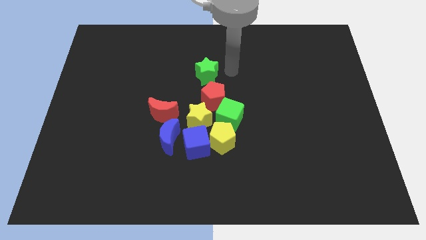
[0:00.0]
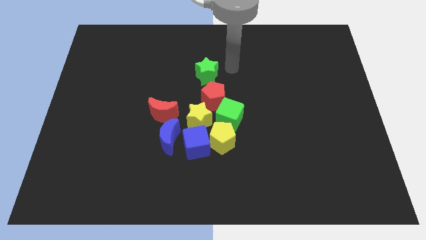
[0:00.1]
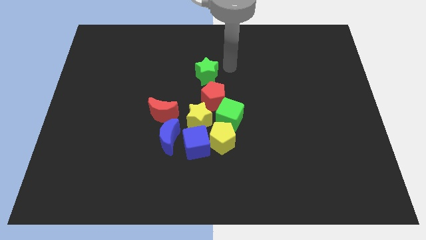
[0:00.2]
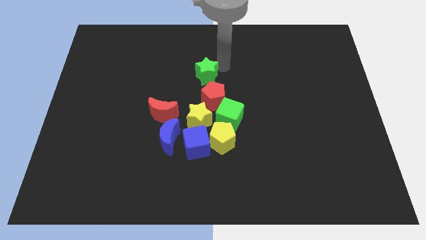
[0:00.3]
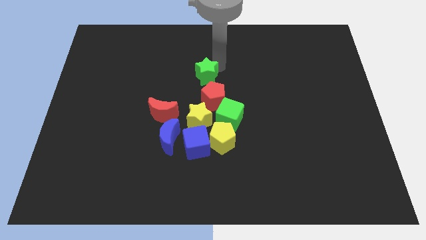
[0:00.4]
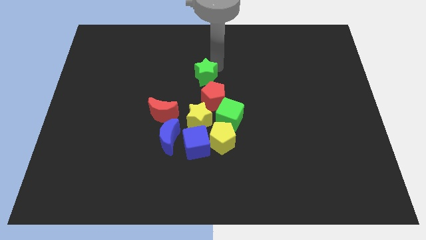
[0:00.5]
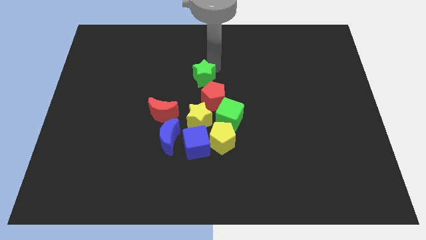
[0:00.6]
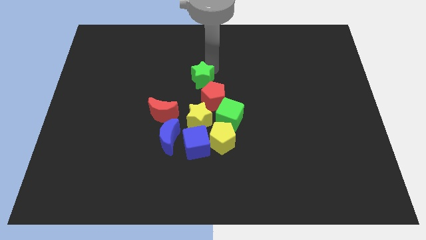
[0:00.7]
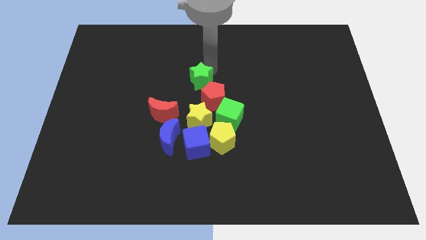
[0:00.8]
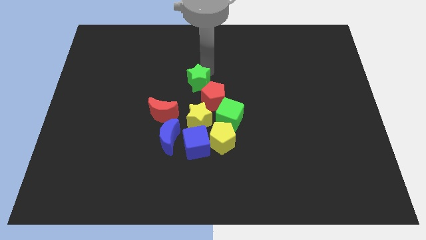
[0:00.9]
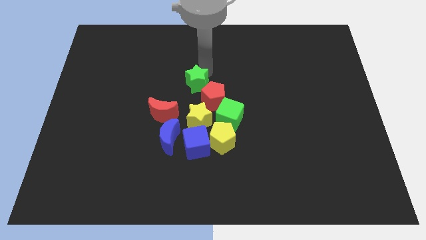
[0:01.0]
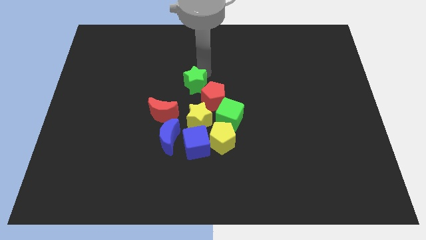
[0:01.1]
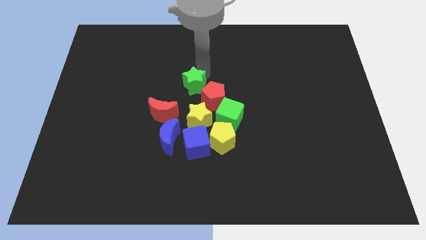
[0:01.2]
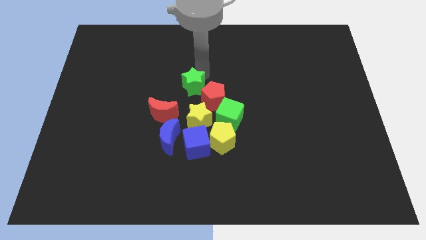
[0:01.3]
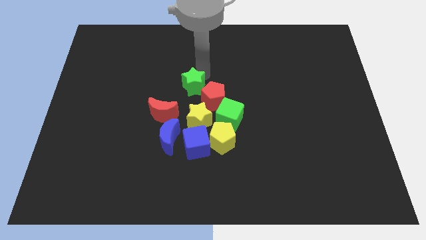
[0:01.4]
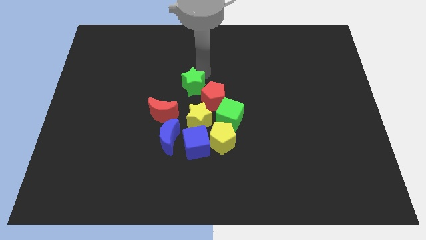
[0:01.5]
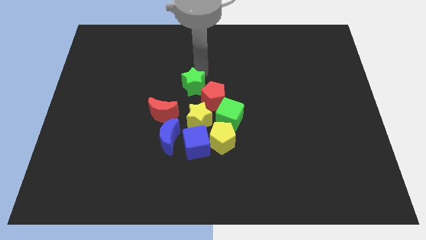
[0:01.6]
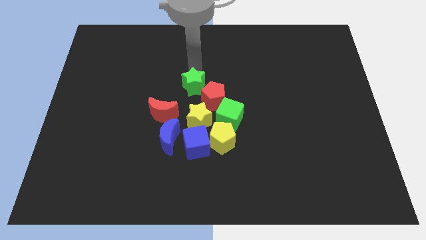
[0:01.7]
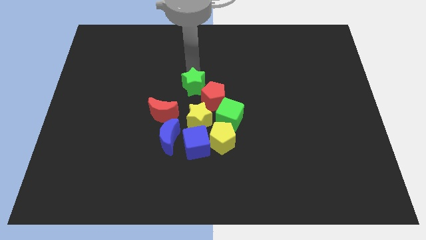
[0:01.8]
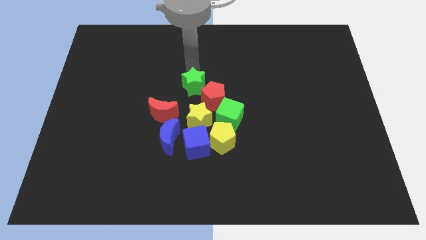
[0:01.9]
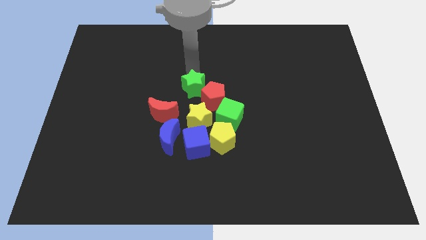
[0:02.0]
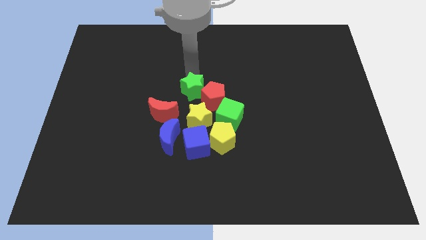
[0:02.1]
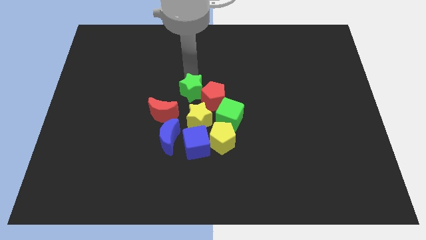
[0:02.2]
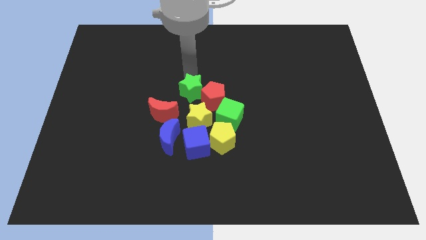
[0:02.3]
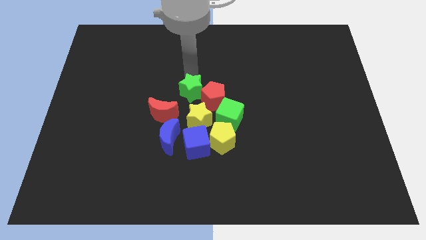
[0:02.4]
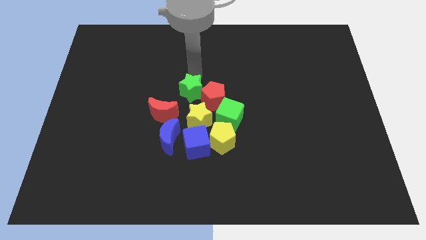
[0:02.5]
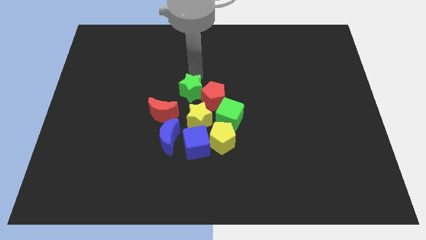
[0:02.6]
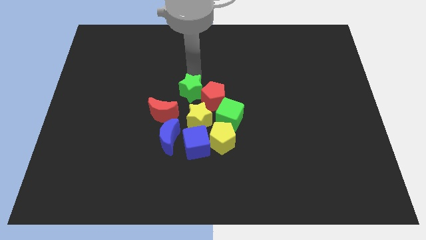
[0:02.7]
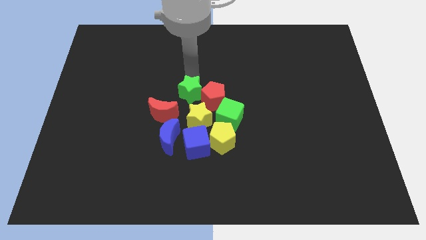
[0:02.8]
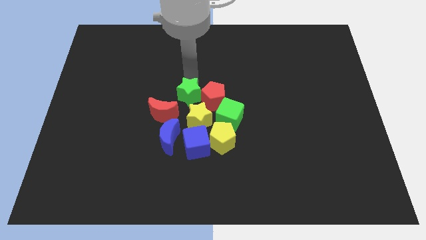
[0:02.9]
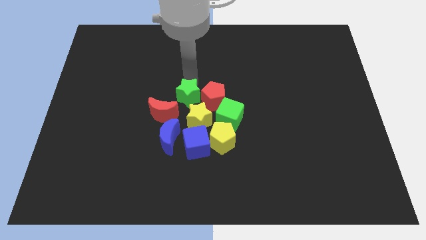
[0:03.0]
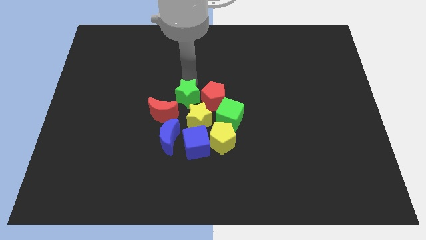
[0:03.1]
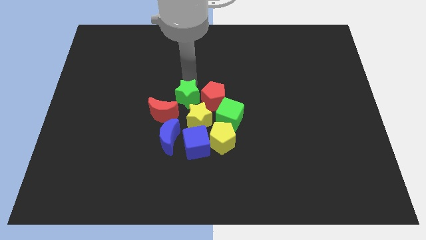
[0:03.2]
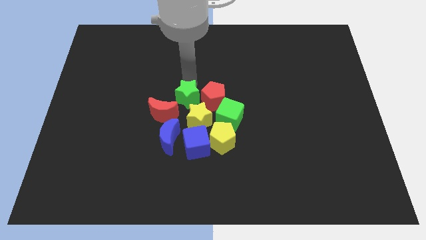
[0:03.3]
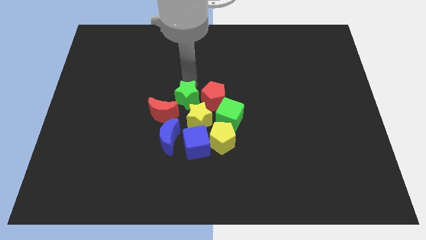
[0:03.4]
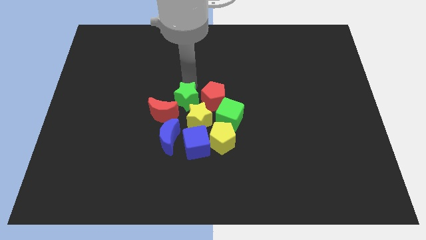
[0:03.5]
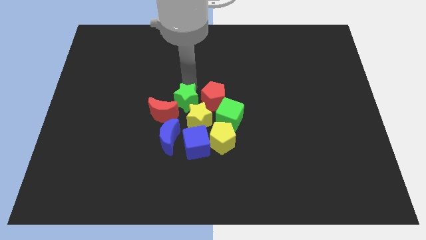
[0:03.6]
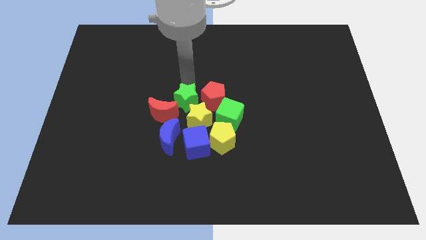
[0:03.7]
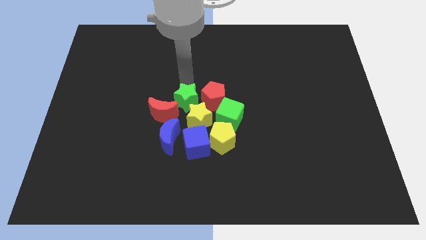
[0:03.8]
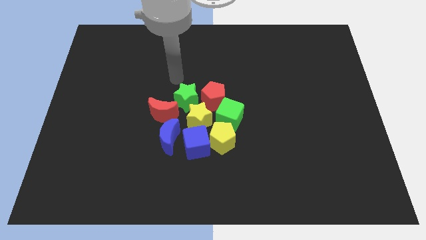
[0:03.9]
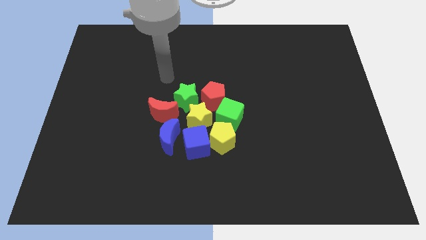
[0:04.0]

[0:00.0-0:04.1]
push the green star to the left of the red pentagon

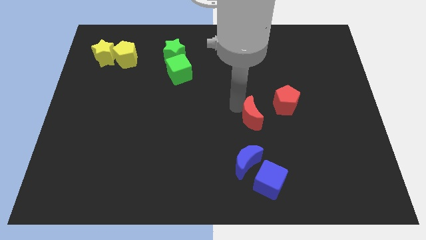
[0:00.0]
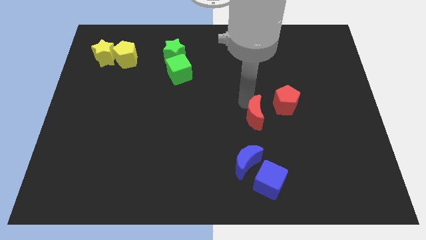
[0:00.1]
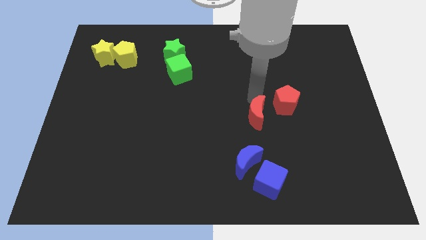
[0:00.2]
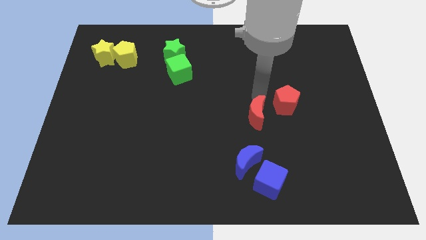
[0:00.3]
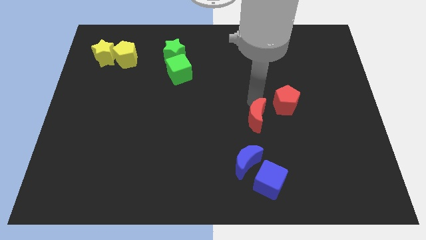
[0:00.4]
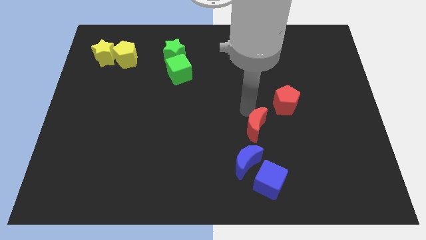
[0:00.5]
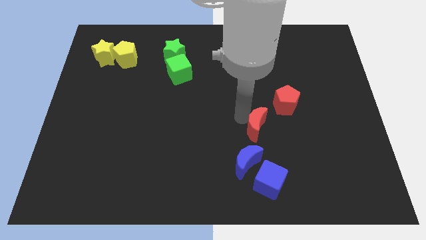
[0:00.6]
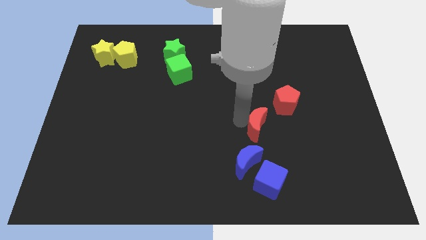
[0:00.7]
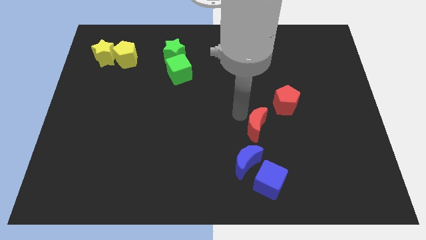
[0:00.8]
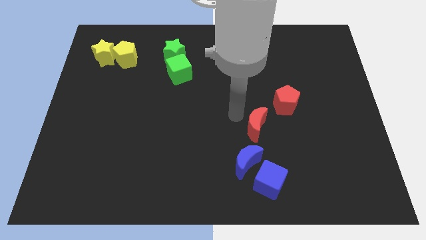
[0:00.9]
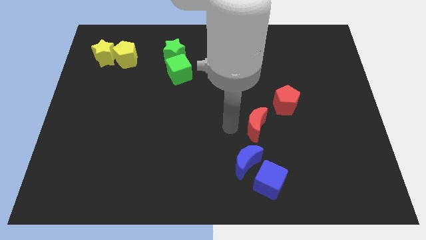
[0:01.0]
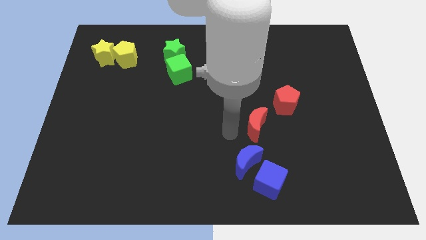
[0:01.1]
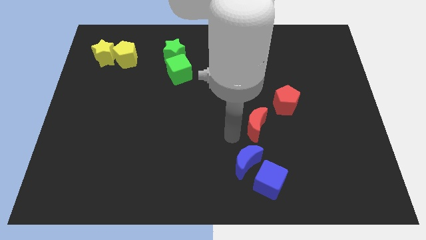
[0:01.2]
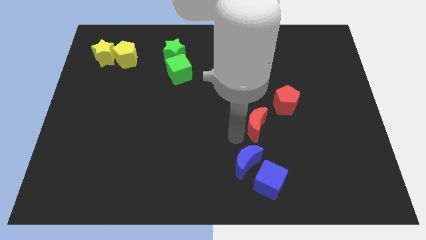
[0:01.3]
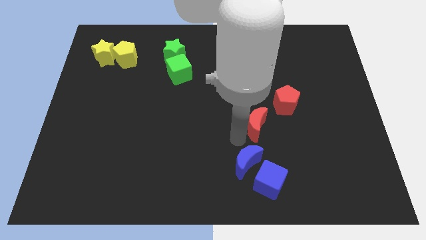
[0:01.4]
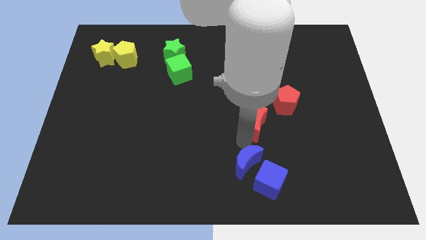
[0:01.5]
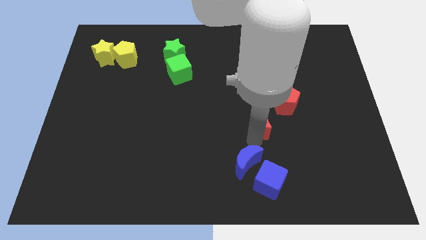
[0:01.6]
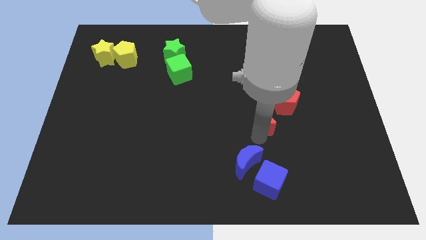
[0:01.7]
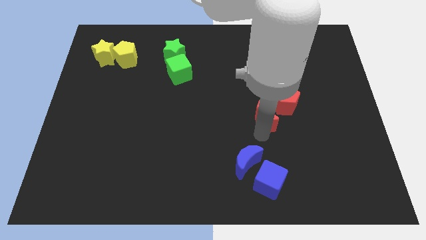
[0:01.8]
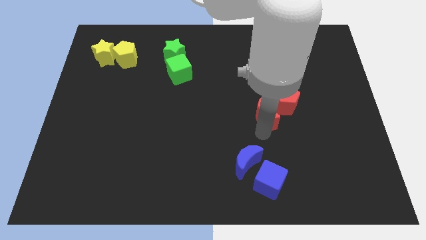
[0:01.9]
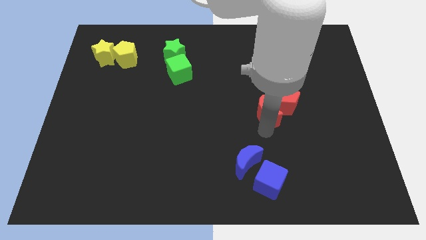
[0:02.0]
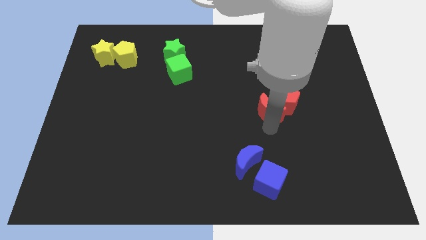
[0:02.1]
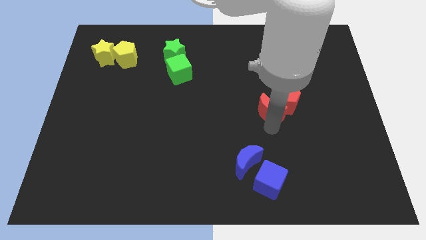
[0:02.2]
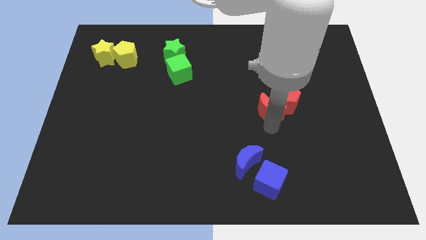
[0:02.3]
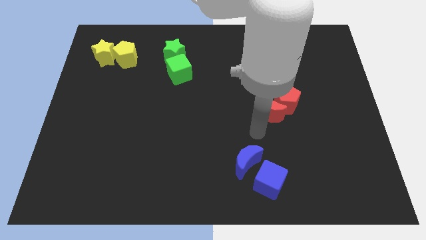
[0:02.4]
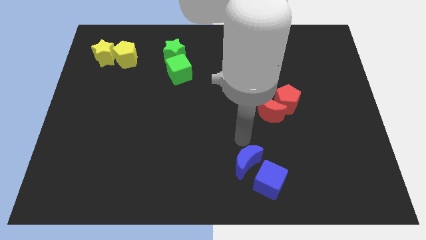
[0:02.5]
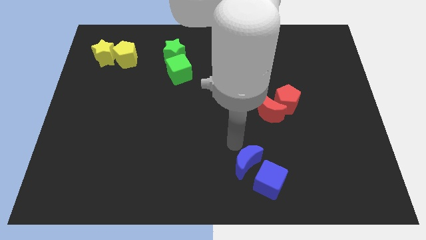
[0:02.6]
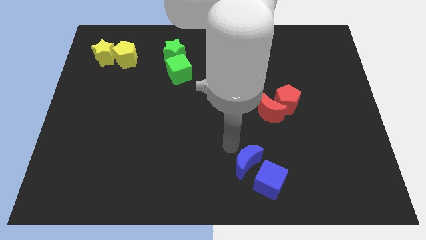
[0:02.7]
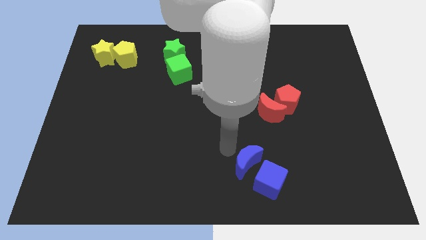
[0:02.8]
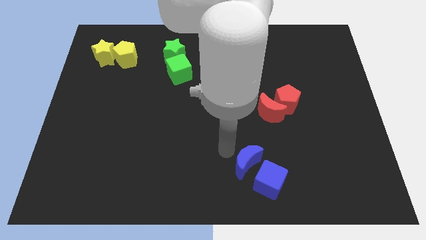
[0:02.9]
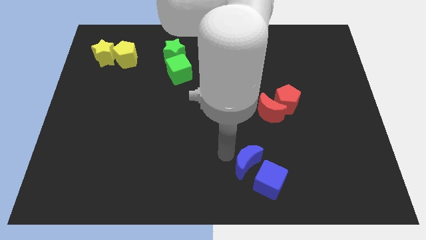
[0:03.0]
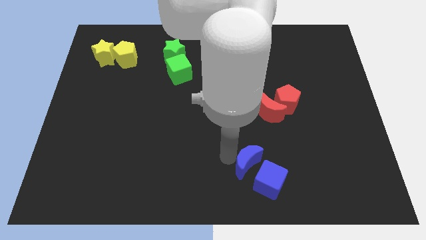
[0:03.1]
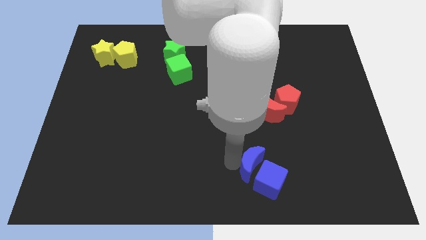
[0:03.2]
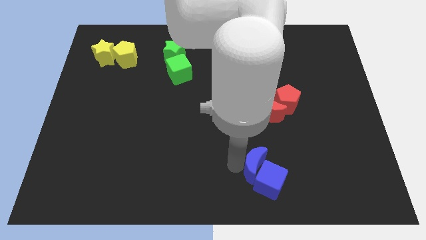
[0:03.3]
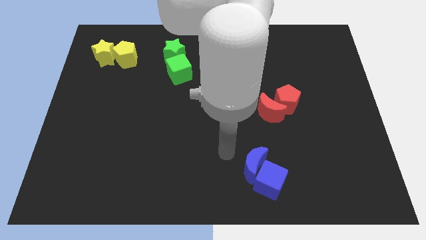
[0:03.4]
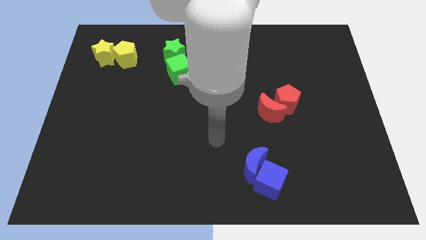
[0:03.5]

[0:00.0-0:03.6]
push the blue moon close to the blue cube

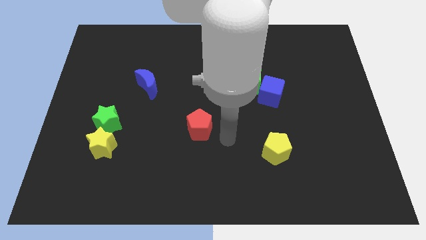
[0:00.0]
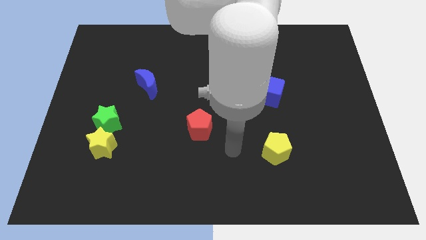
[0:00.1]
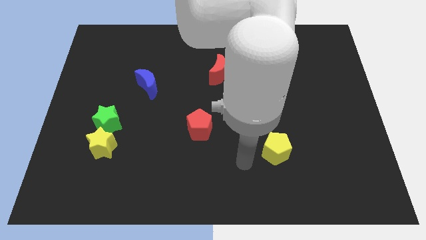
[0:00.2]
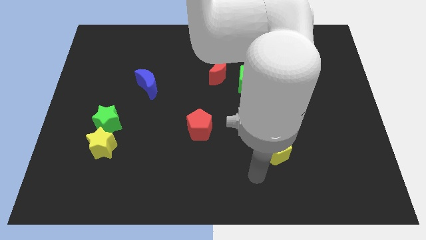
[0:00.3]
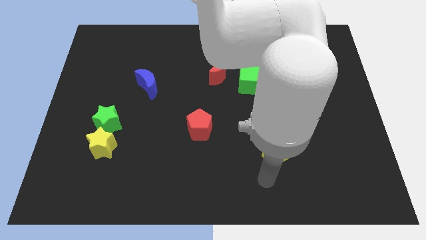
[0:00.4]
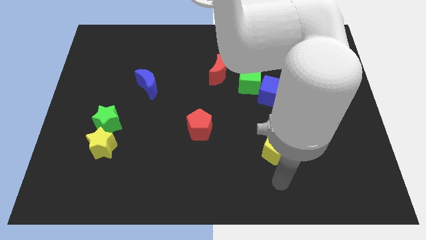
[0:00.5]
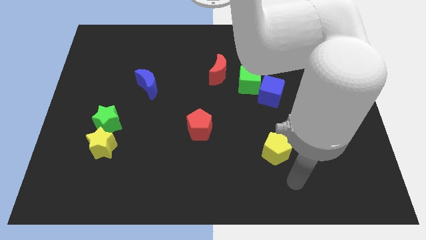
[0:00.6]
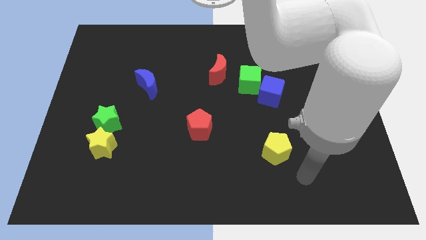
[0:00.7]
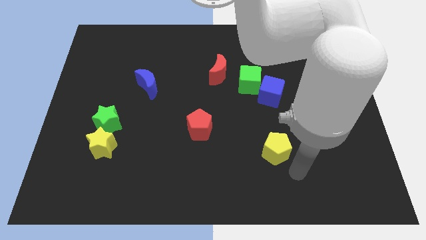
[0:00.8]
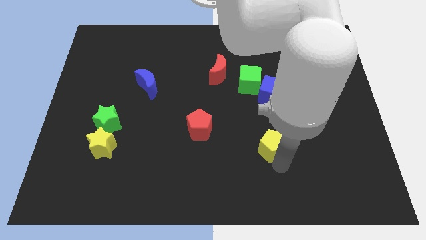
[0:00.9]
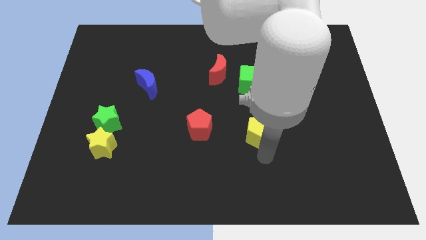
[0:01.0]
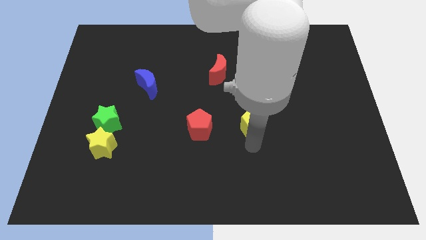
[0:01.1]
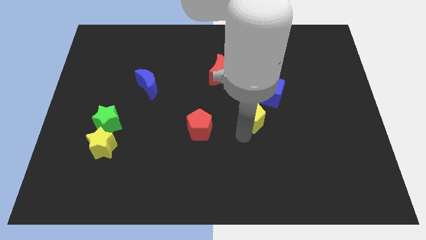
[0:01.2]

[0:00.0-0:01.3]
move away from the red pentagon to the bottom side of the yellow pentagon
